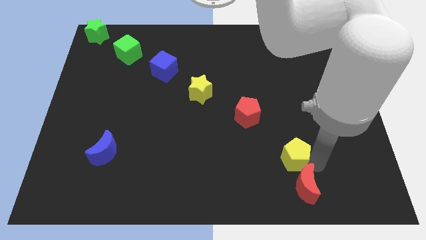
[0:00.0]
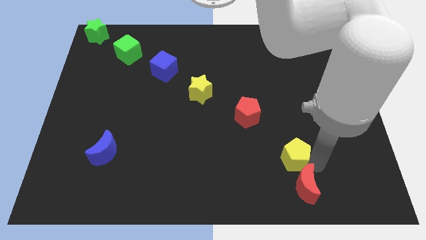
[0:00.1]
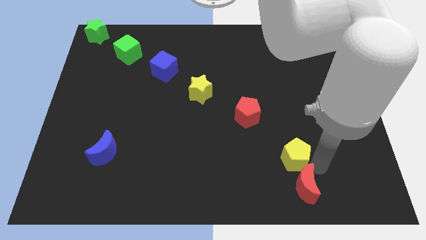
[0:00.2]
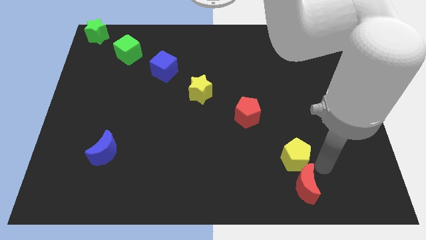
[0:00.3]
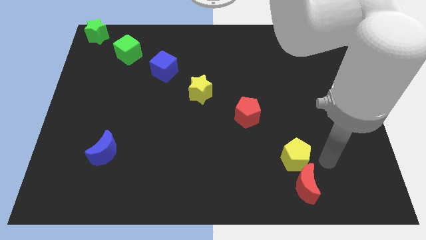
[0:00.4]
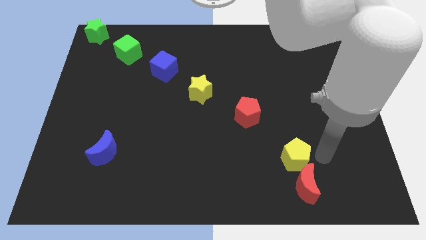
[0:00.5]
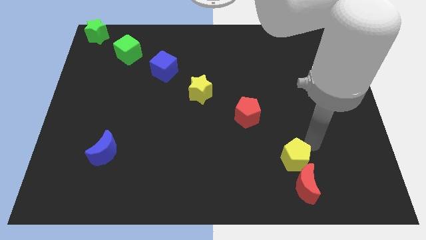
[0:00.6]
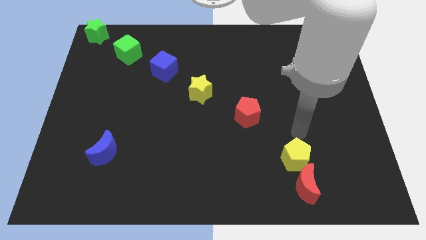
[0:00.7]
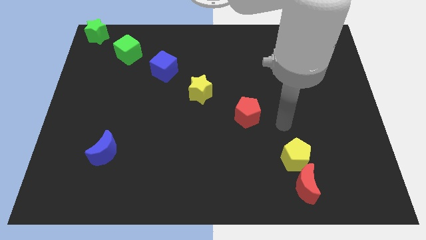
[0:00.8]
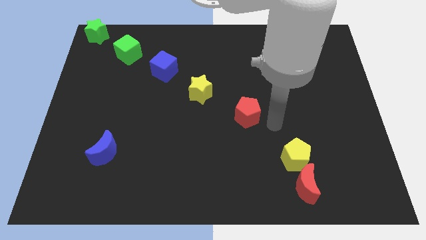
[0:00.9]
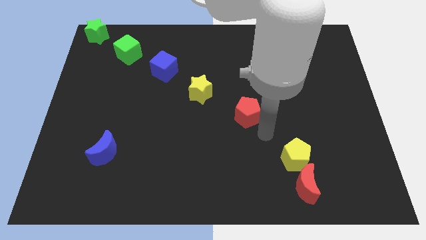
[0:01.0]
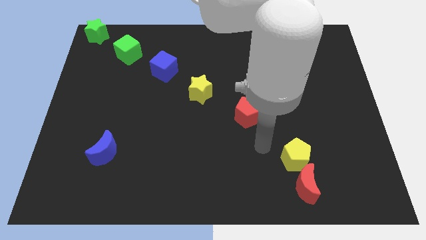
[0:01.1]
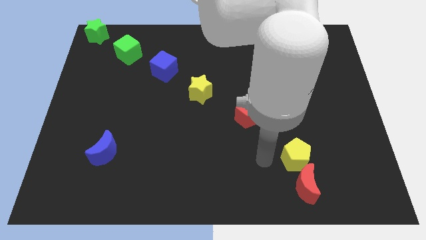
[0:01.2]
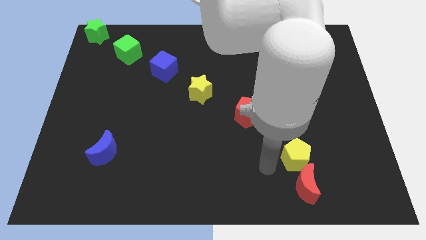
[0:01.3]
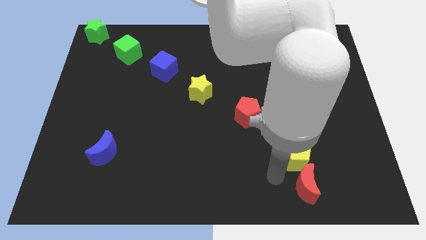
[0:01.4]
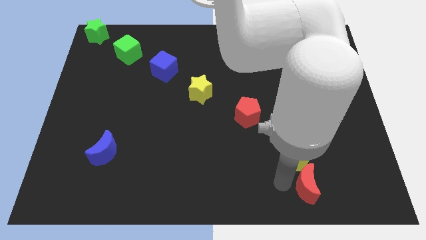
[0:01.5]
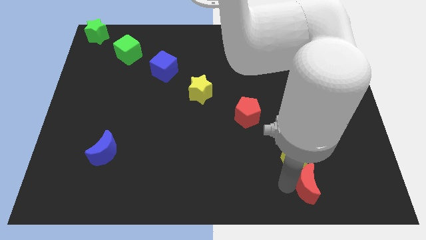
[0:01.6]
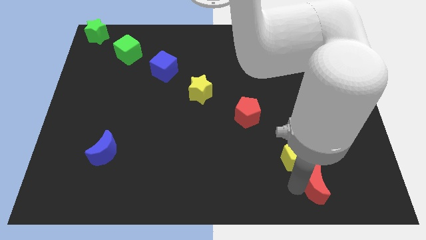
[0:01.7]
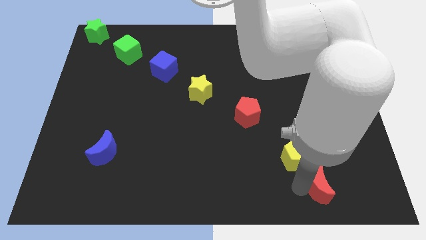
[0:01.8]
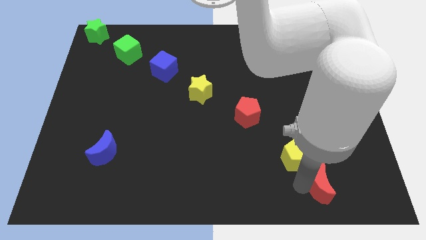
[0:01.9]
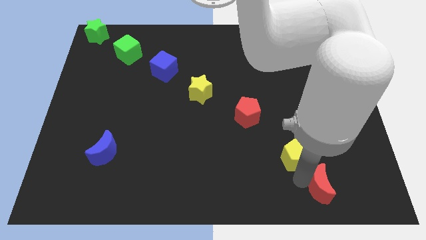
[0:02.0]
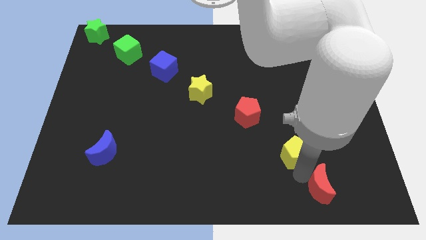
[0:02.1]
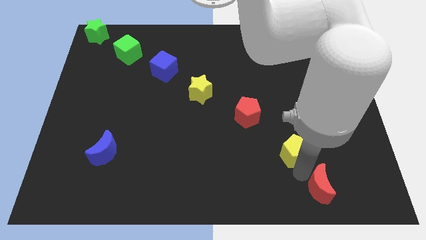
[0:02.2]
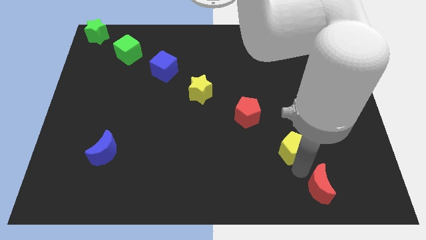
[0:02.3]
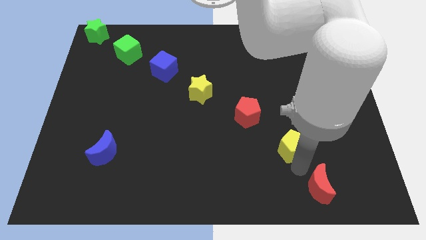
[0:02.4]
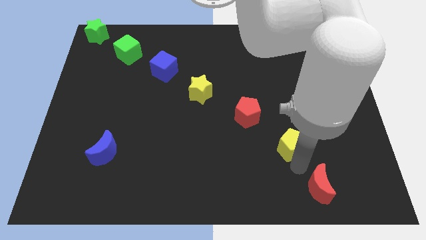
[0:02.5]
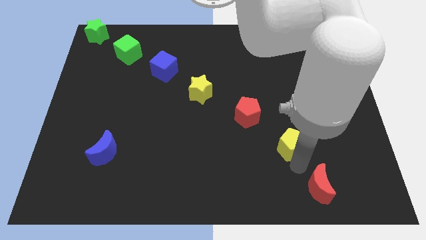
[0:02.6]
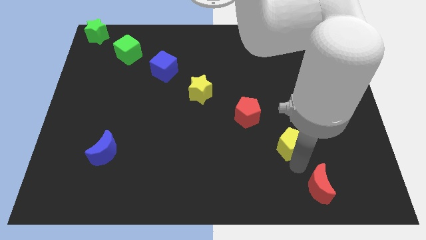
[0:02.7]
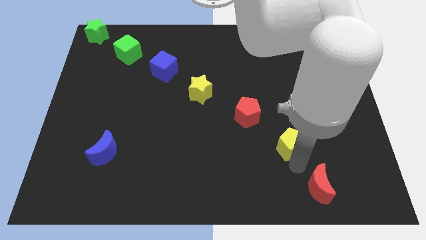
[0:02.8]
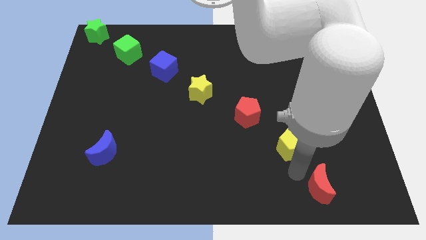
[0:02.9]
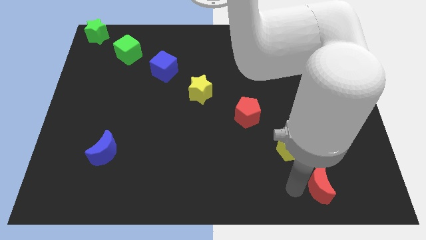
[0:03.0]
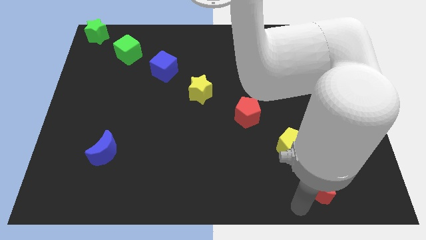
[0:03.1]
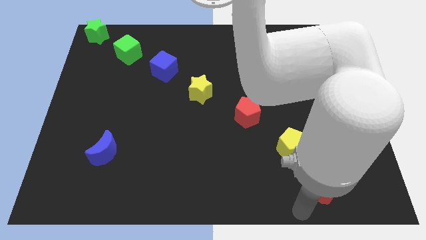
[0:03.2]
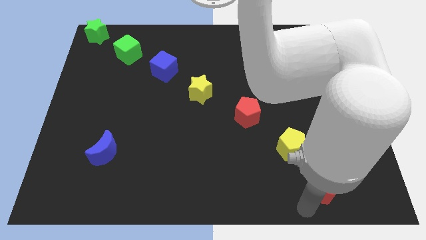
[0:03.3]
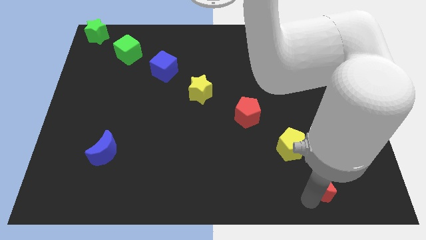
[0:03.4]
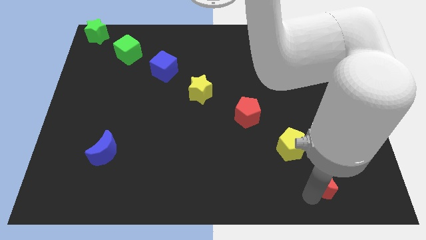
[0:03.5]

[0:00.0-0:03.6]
push the yellow pentagon diagonally left of the red crescent

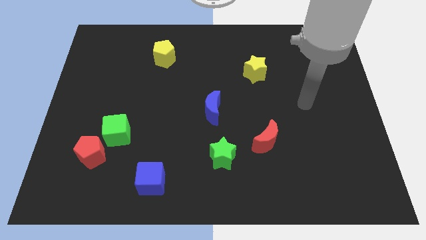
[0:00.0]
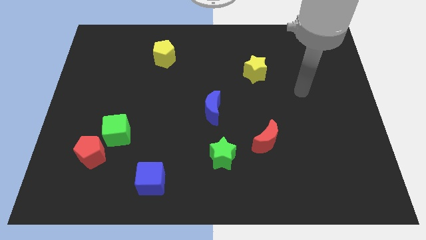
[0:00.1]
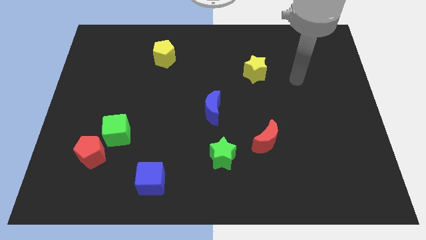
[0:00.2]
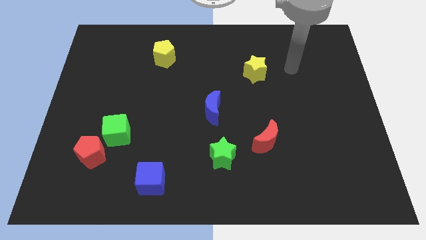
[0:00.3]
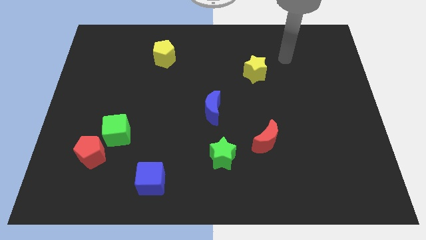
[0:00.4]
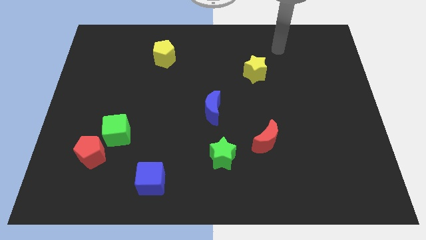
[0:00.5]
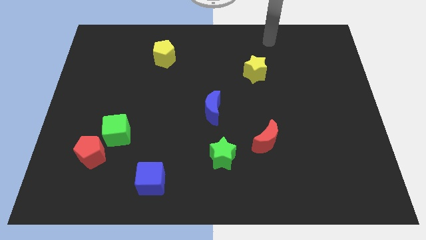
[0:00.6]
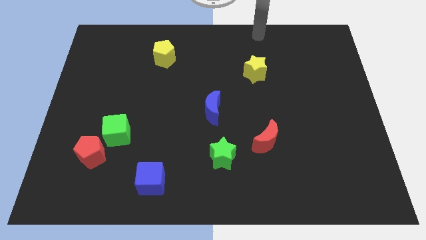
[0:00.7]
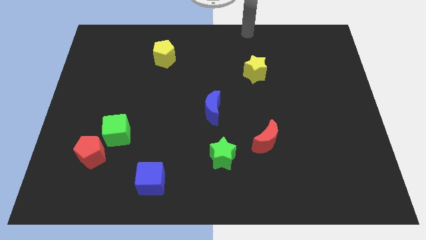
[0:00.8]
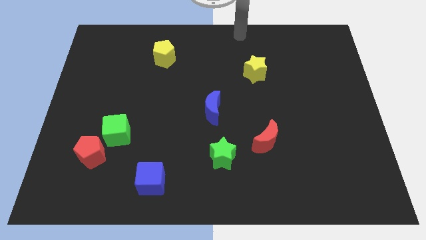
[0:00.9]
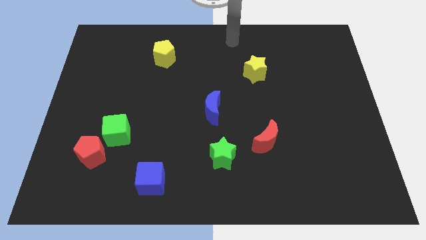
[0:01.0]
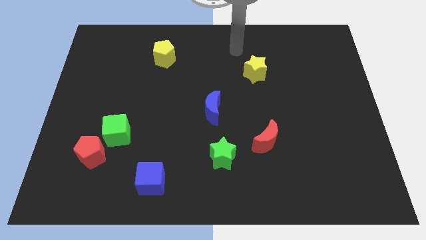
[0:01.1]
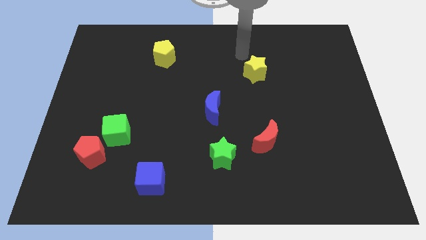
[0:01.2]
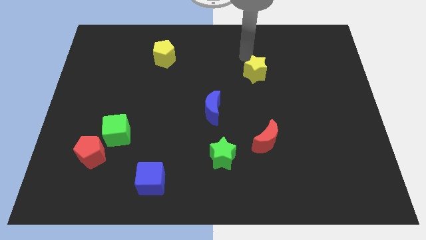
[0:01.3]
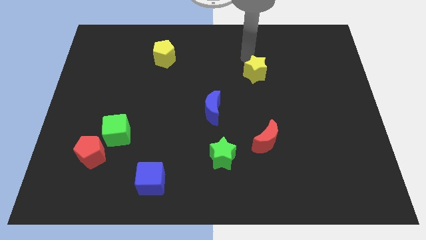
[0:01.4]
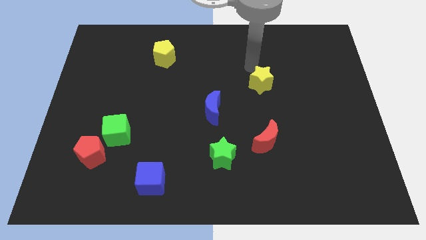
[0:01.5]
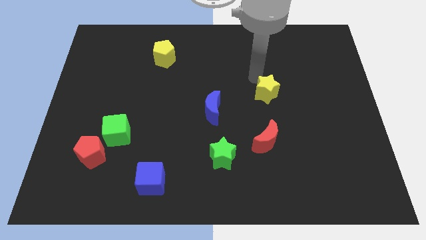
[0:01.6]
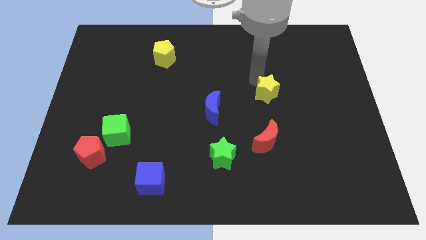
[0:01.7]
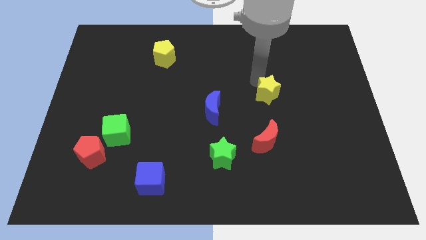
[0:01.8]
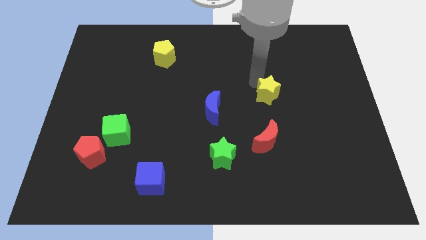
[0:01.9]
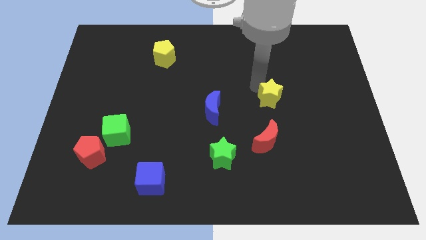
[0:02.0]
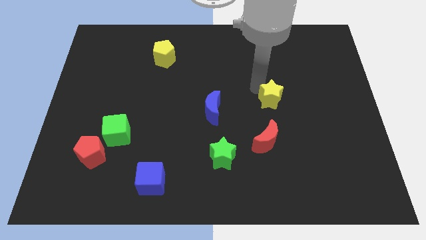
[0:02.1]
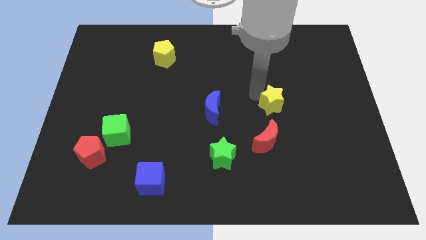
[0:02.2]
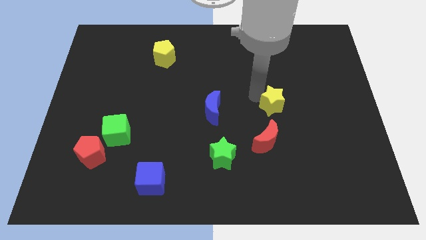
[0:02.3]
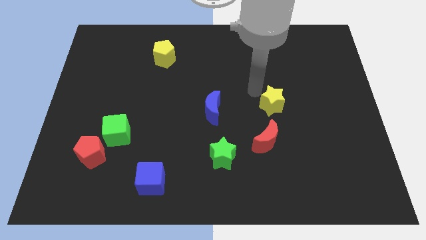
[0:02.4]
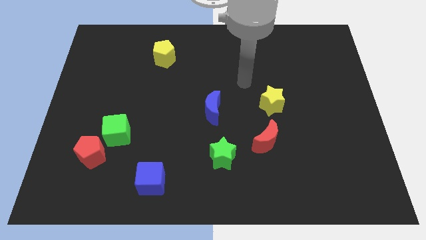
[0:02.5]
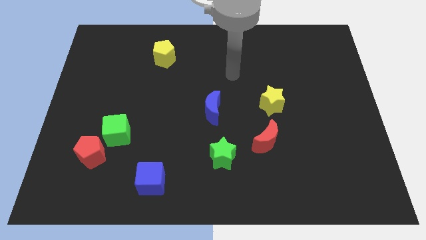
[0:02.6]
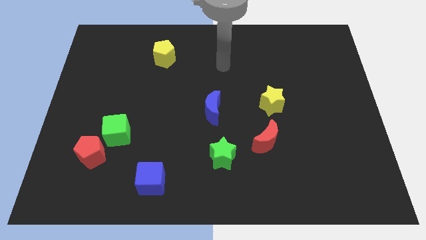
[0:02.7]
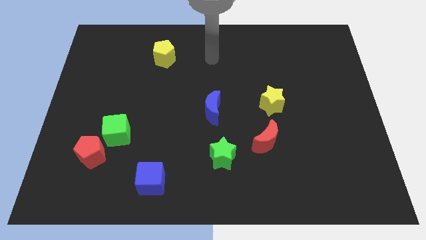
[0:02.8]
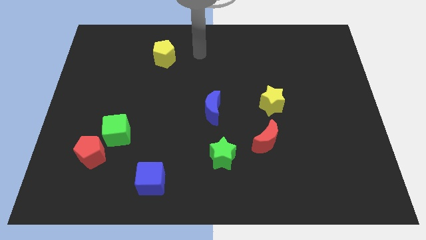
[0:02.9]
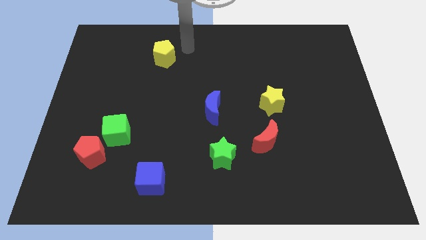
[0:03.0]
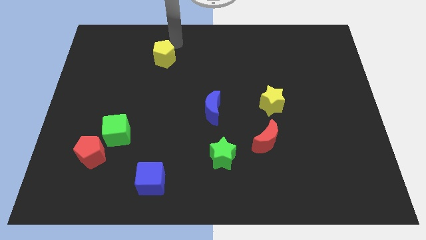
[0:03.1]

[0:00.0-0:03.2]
push the yellow star towards the center of the board

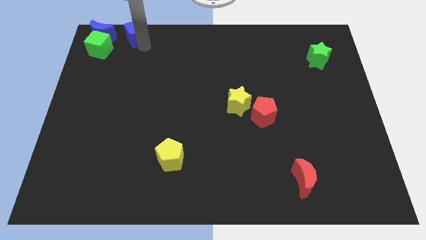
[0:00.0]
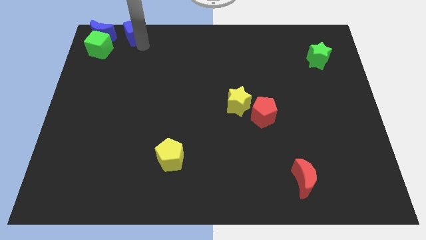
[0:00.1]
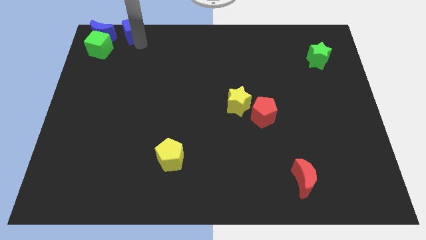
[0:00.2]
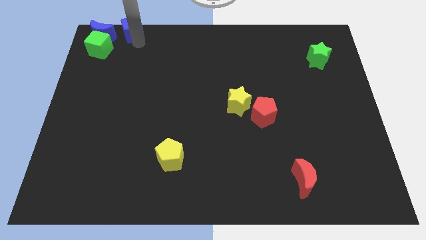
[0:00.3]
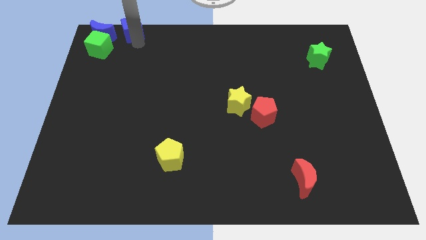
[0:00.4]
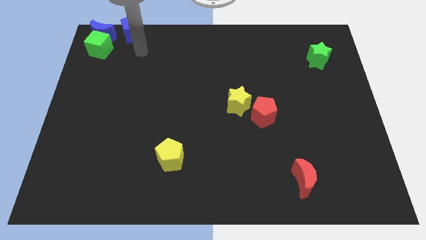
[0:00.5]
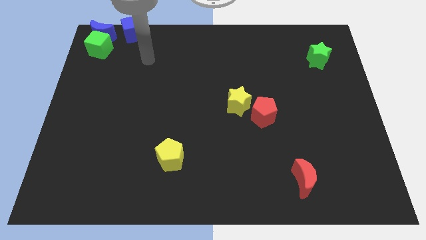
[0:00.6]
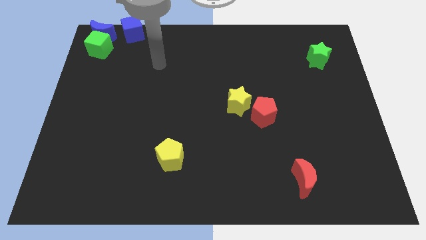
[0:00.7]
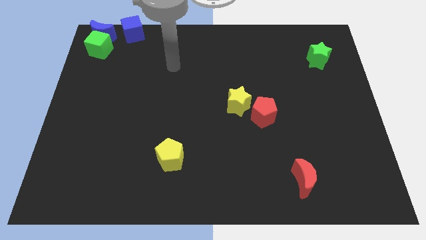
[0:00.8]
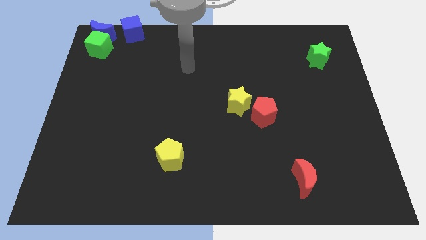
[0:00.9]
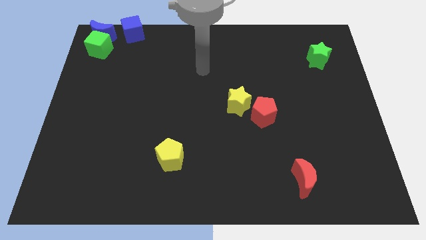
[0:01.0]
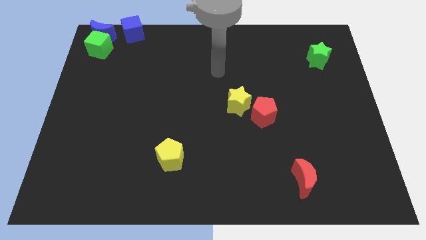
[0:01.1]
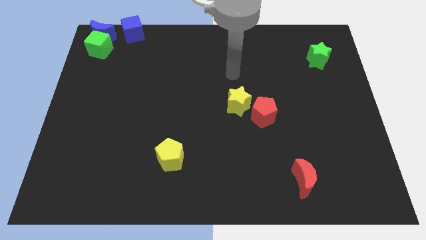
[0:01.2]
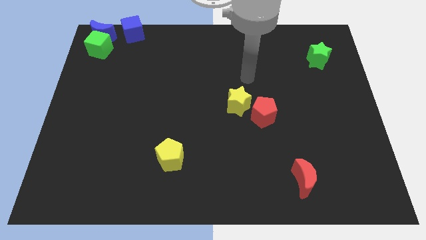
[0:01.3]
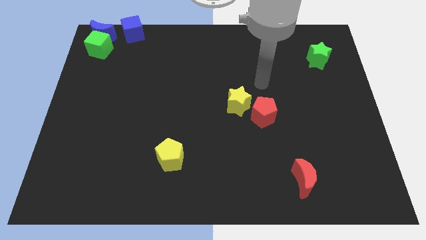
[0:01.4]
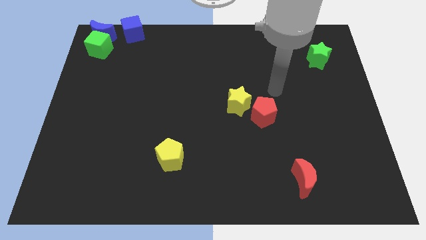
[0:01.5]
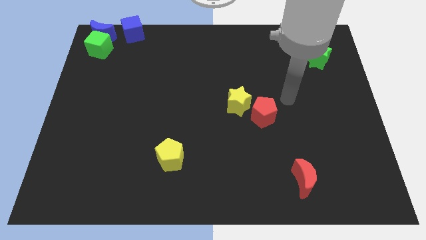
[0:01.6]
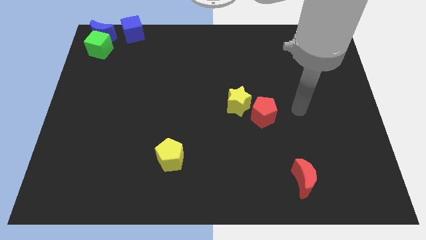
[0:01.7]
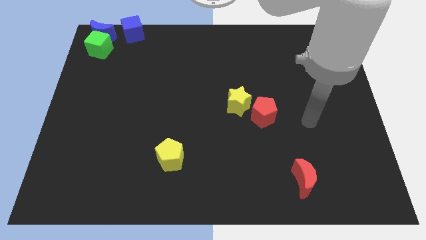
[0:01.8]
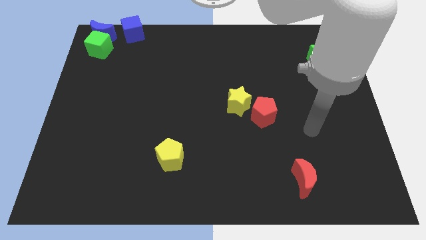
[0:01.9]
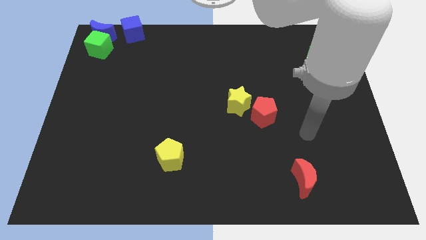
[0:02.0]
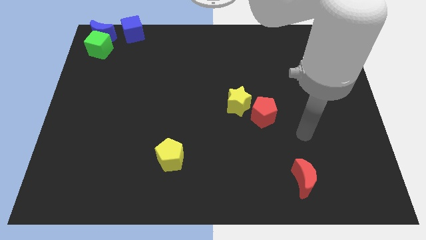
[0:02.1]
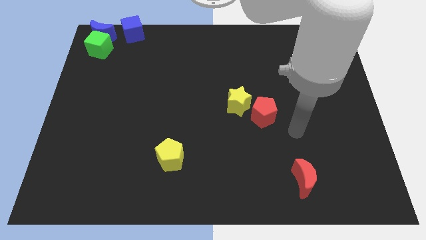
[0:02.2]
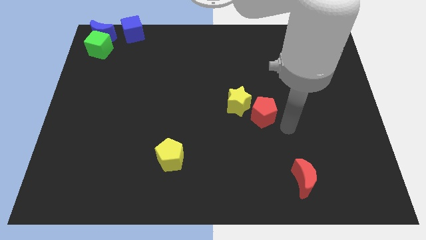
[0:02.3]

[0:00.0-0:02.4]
move your arm to the right of red pentagon
